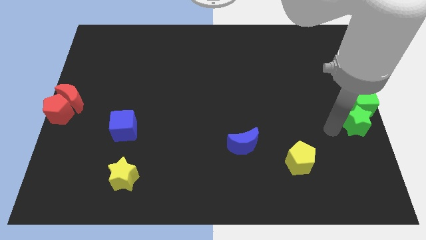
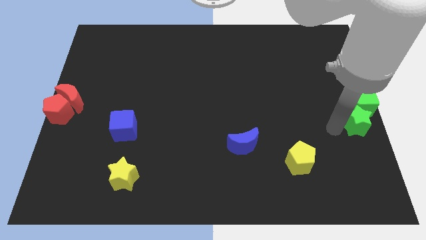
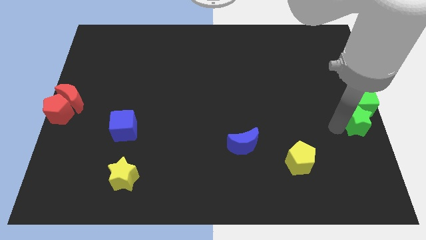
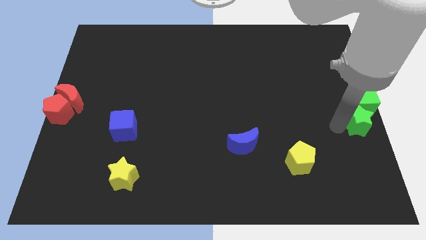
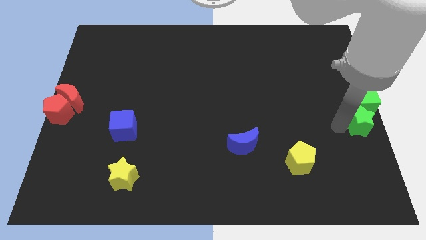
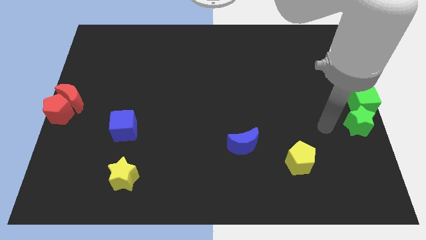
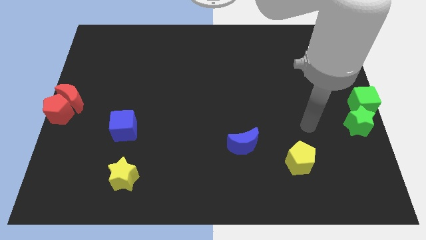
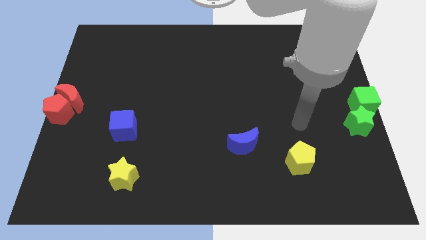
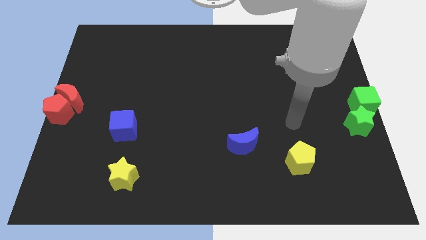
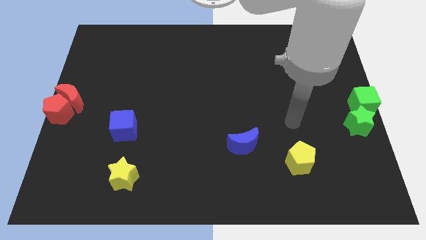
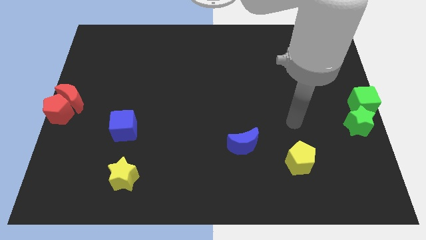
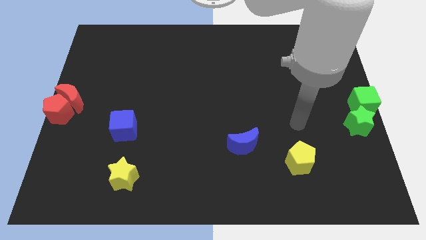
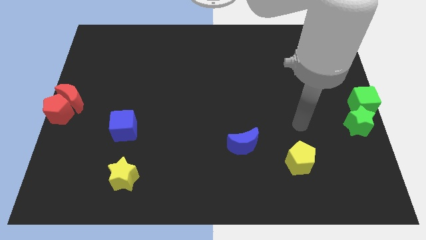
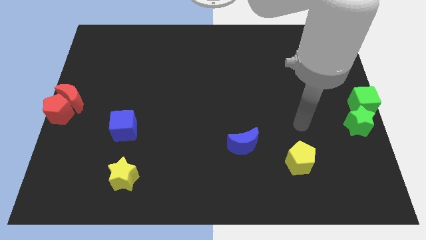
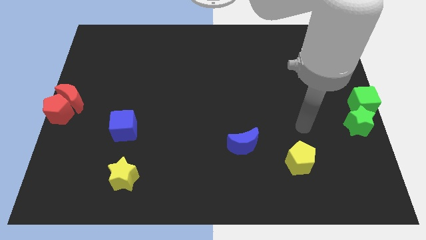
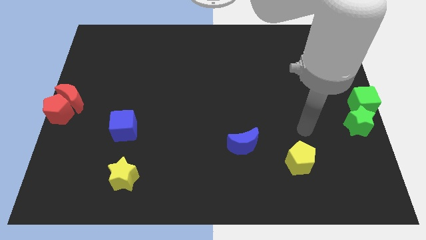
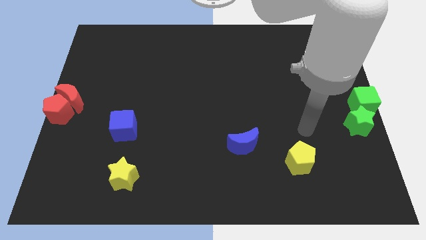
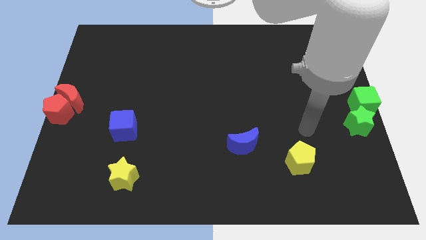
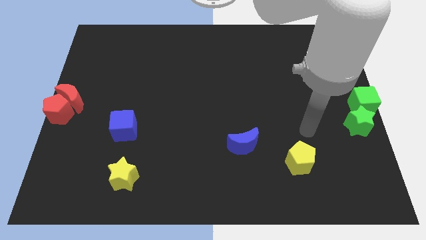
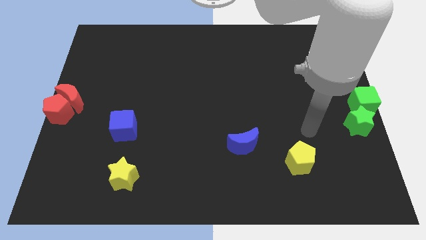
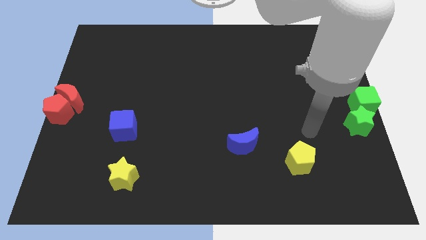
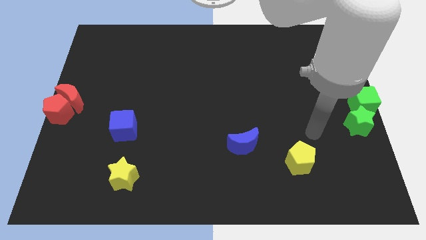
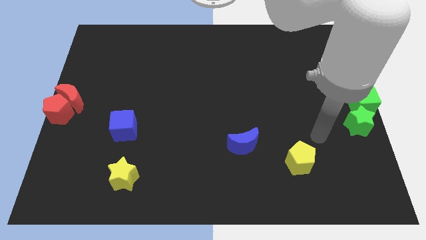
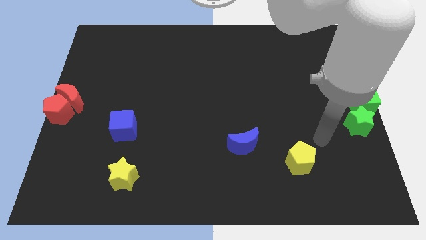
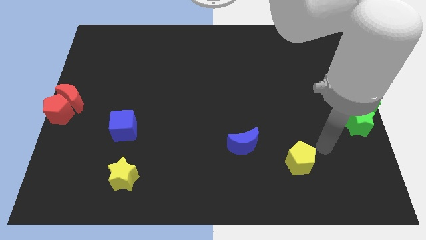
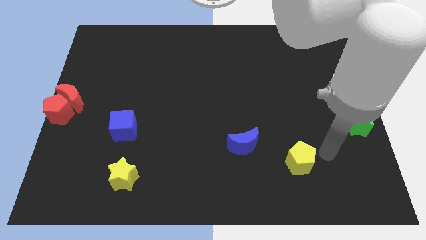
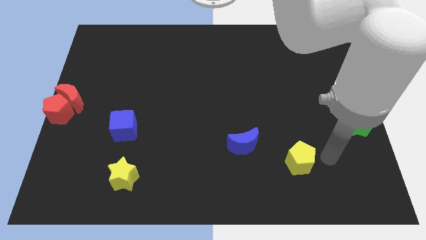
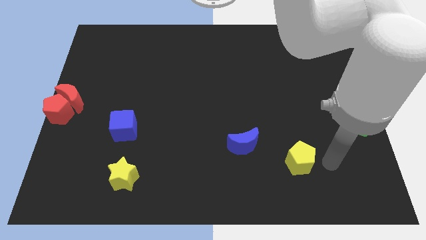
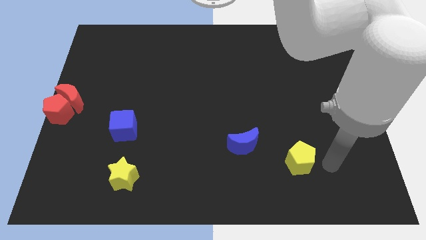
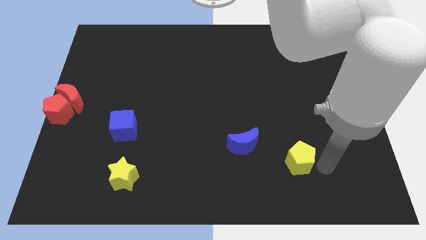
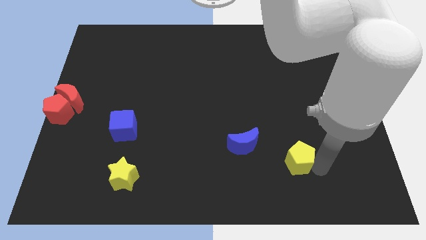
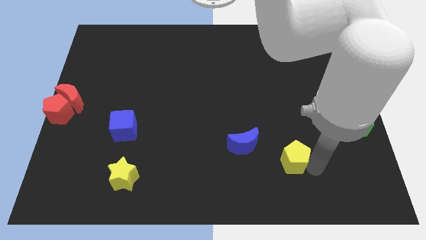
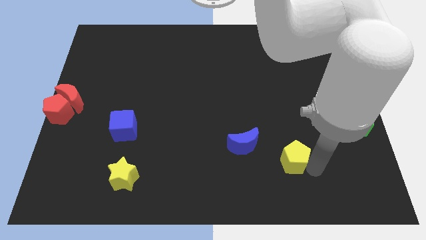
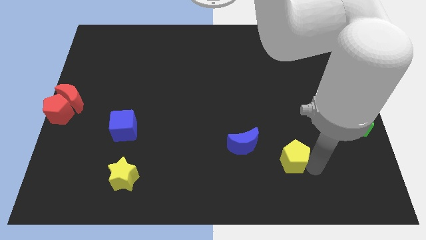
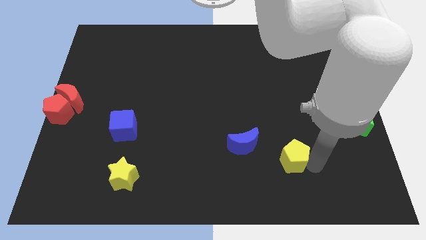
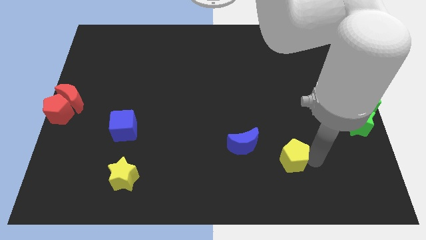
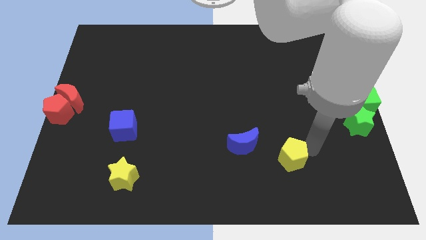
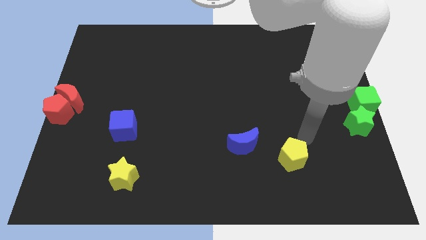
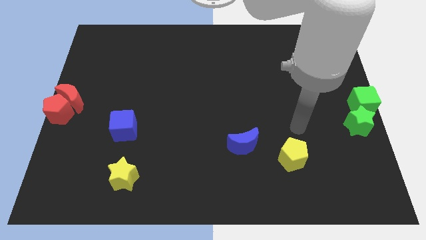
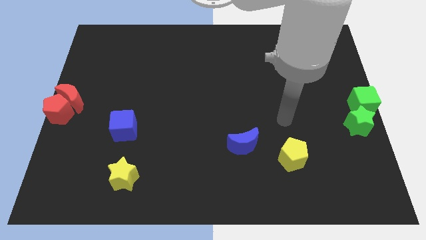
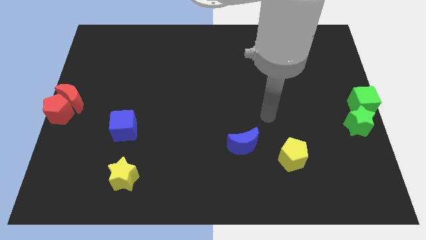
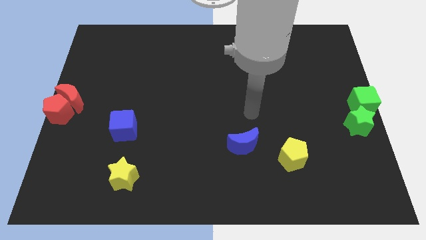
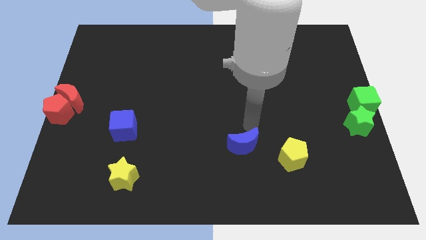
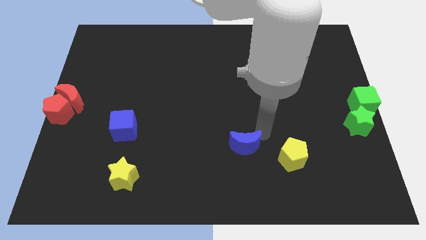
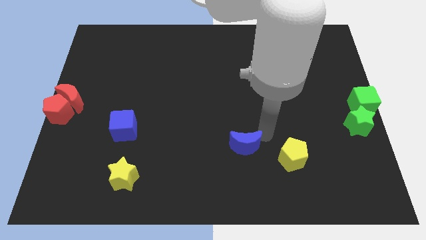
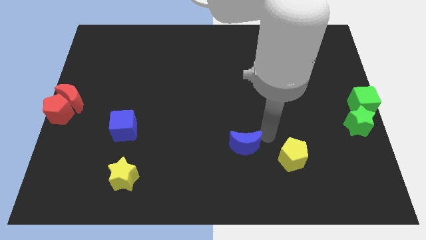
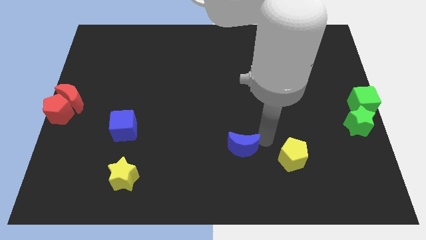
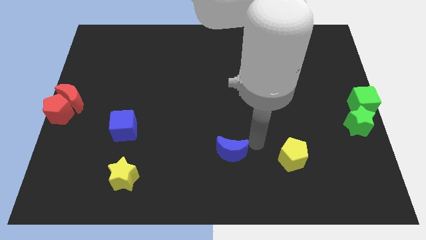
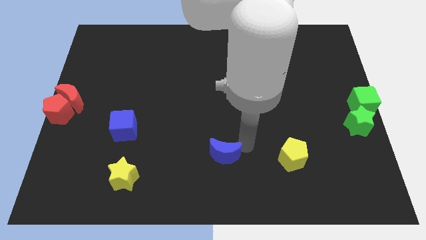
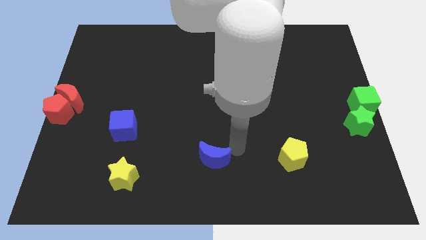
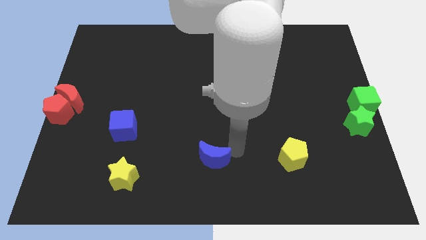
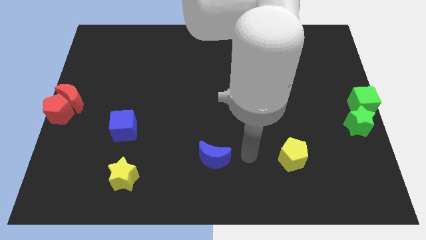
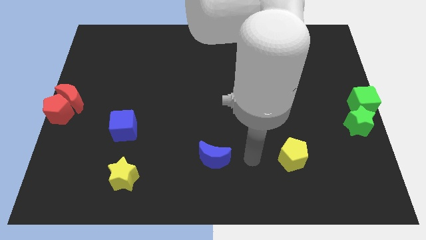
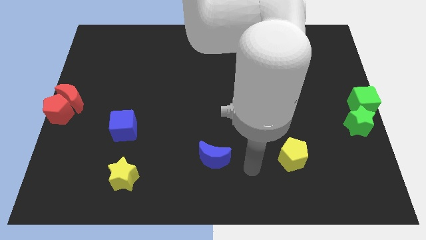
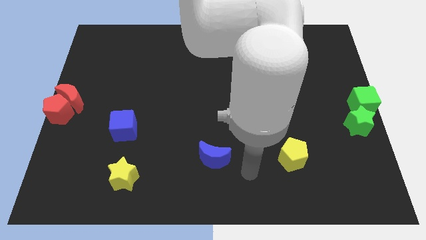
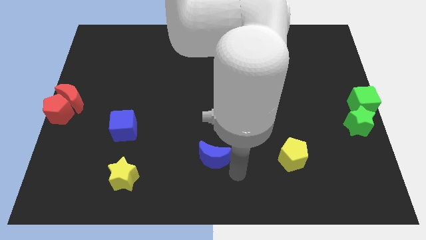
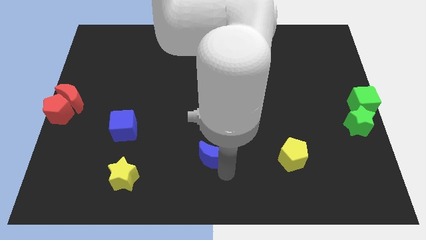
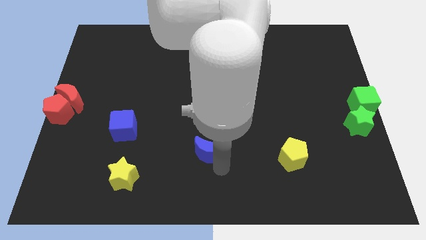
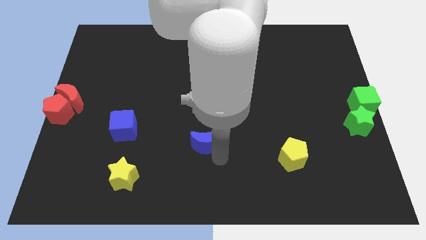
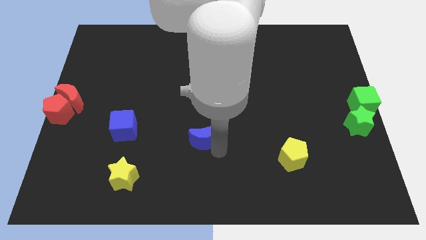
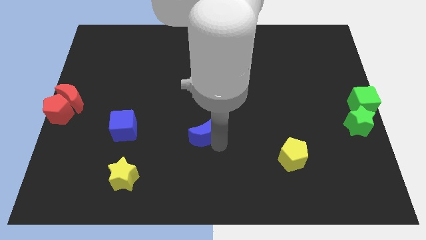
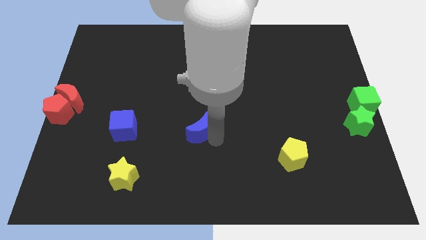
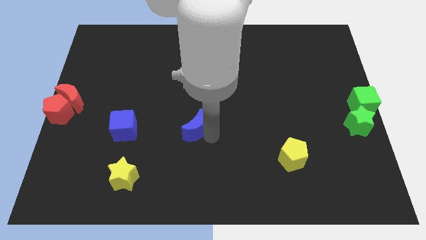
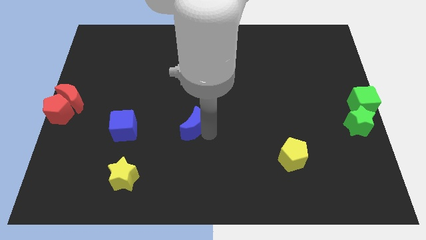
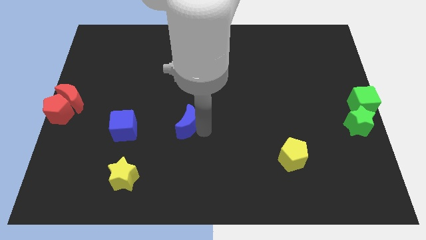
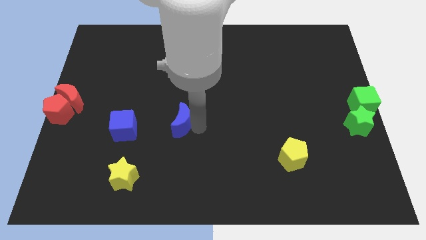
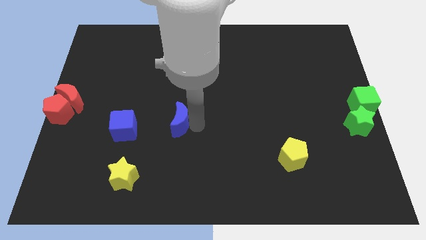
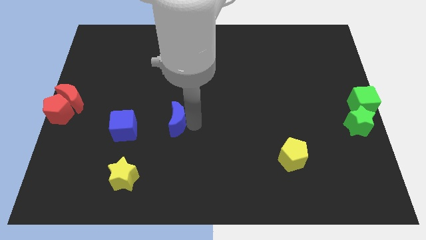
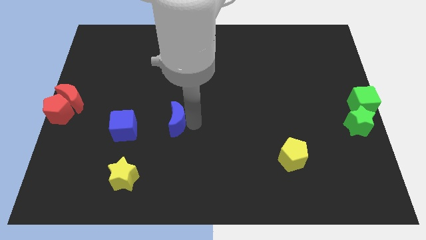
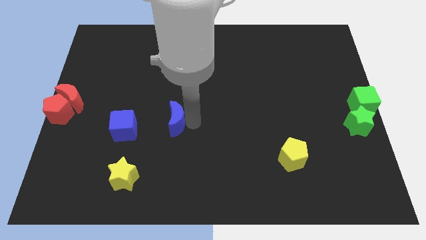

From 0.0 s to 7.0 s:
place the blue semicircle to the right side of the blue cube

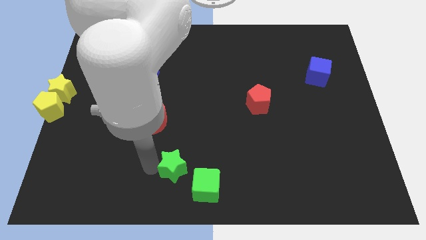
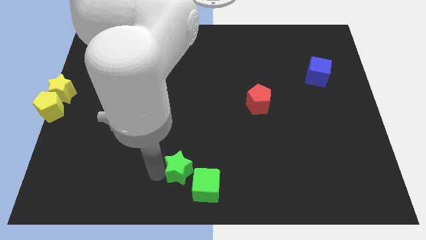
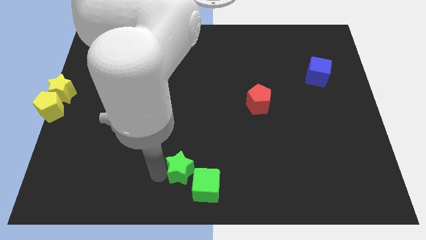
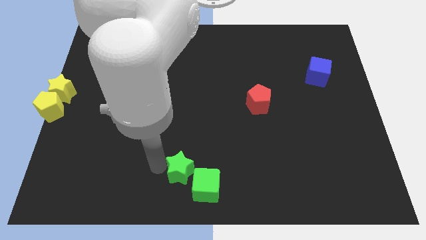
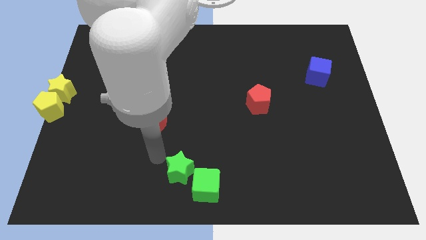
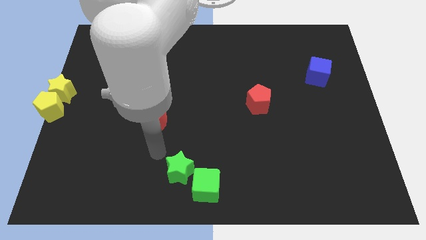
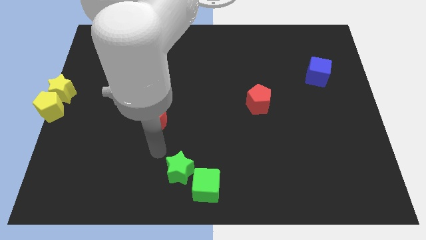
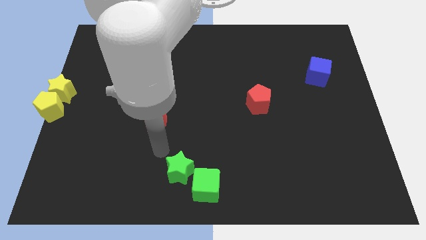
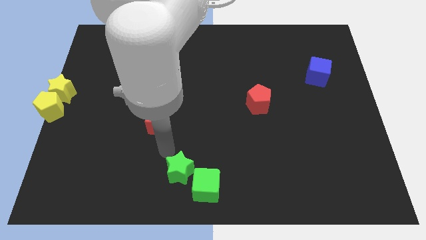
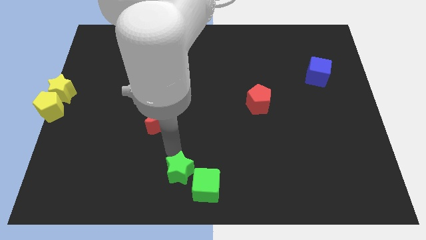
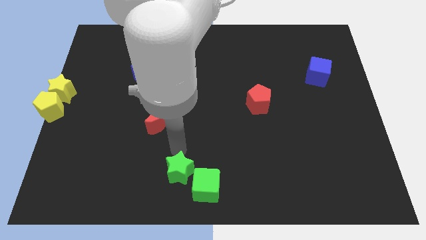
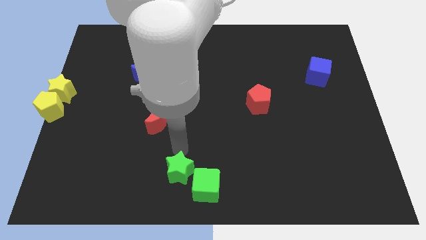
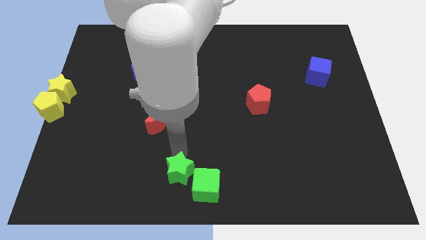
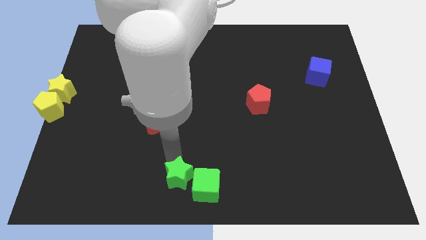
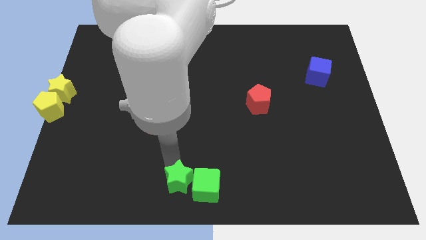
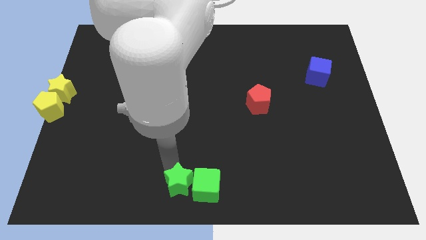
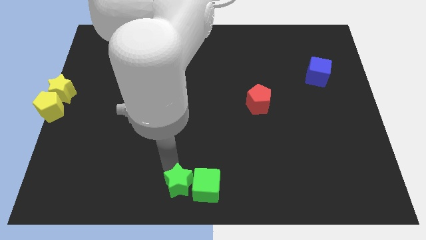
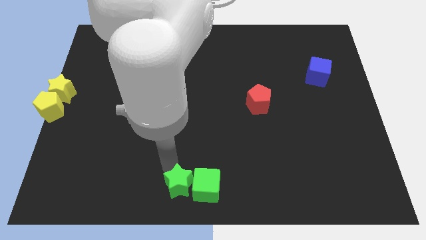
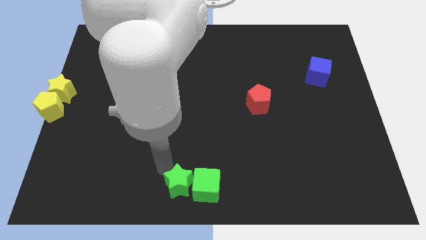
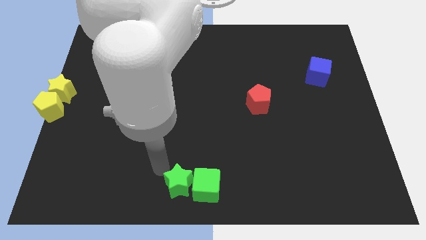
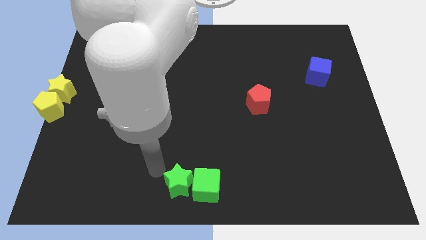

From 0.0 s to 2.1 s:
put the green star parallel left to the green cube
